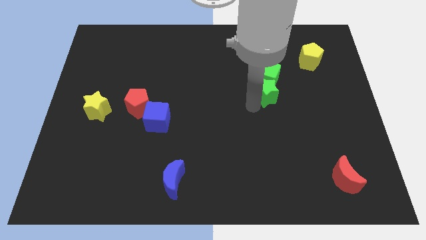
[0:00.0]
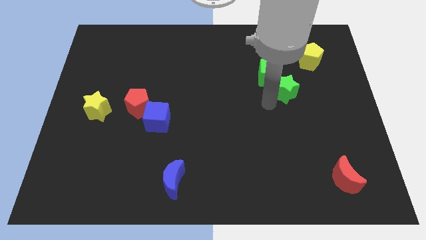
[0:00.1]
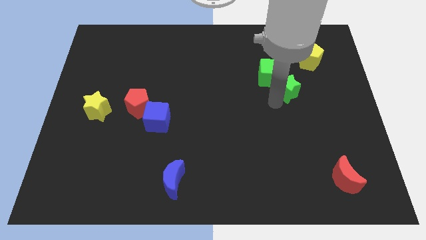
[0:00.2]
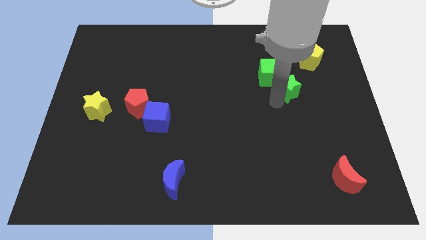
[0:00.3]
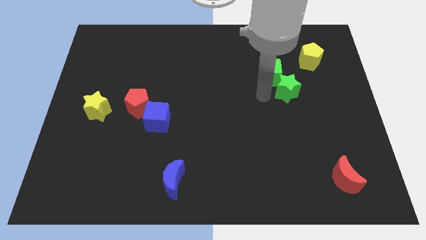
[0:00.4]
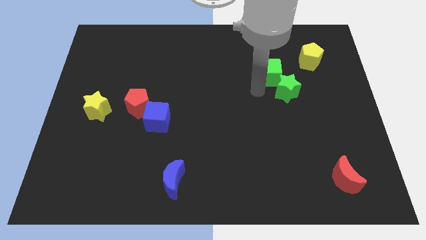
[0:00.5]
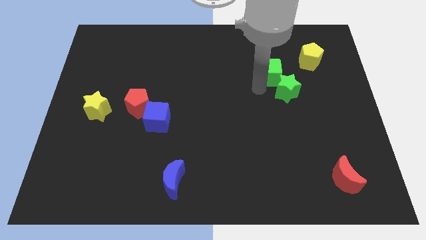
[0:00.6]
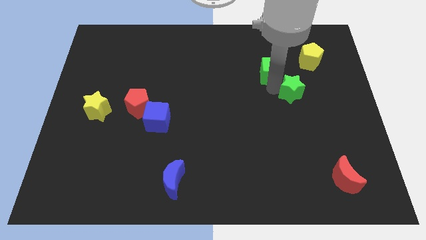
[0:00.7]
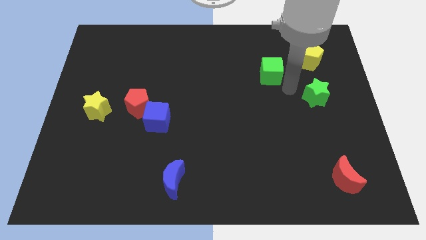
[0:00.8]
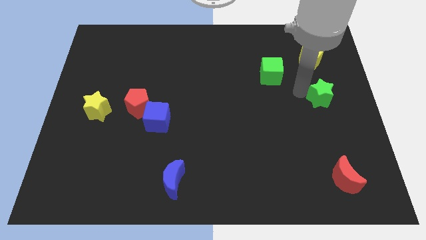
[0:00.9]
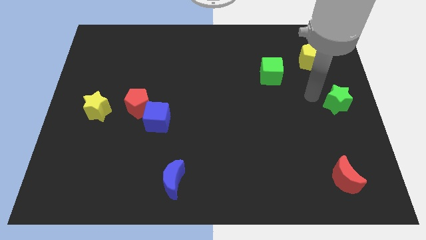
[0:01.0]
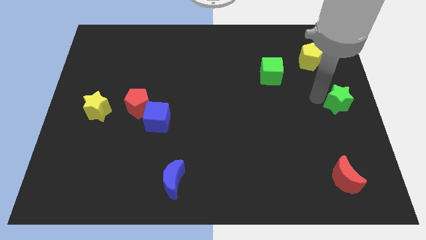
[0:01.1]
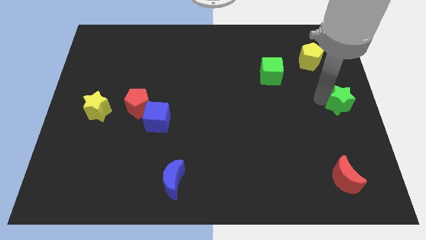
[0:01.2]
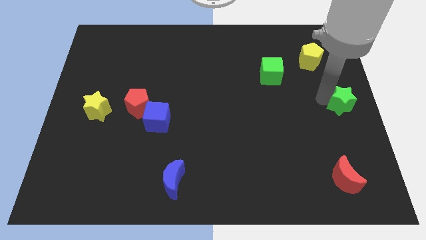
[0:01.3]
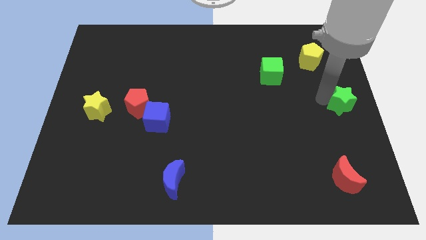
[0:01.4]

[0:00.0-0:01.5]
slide the green star to the center right corner of the board

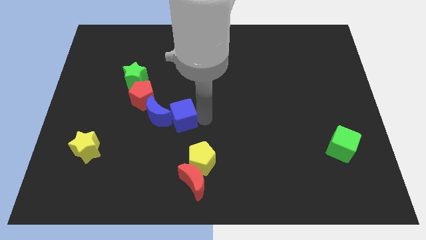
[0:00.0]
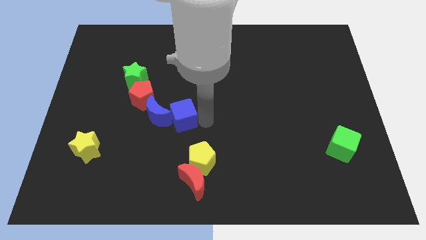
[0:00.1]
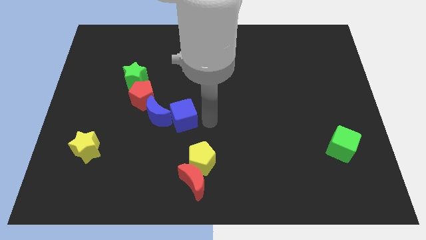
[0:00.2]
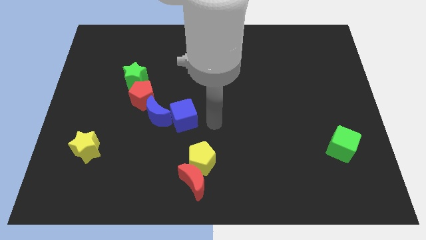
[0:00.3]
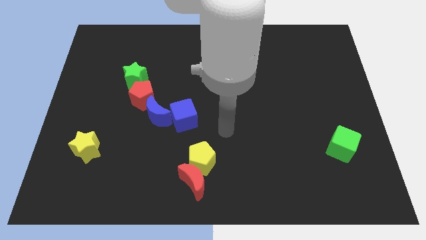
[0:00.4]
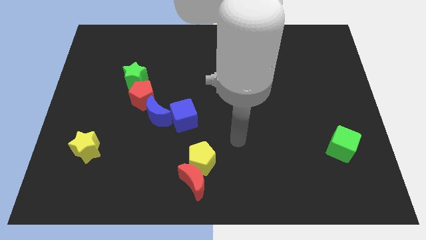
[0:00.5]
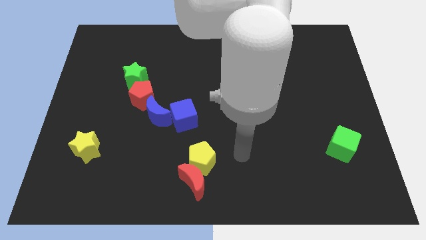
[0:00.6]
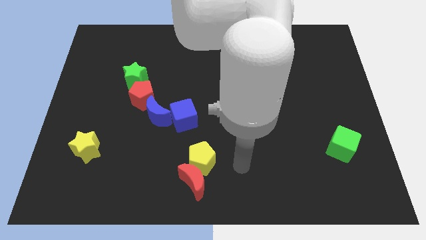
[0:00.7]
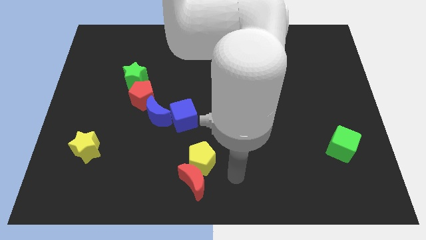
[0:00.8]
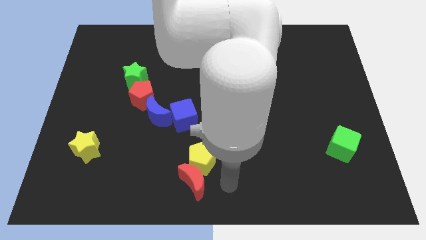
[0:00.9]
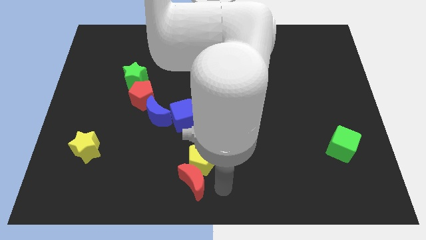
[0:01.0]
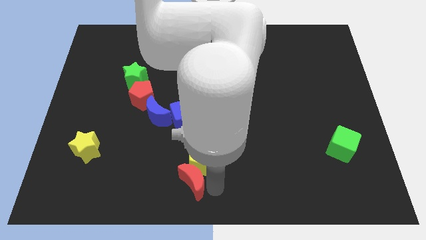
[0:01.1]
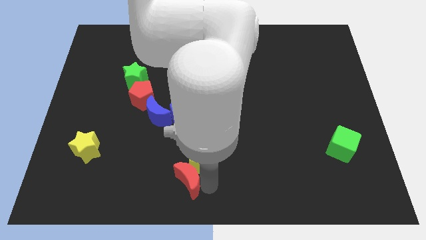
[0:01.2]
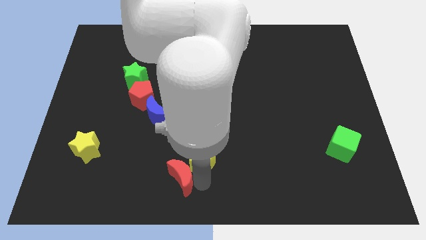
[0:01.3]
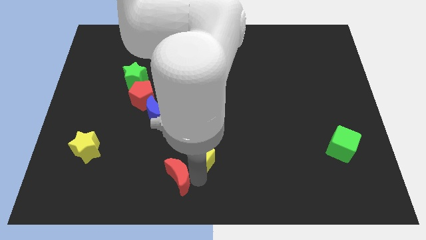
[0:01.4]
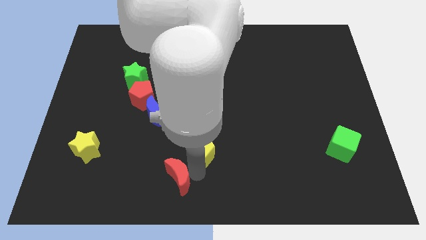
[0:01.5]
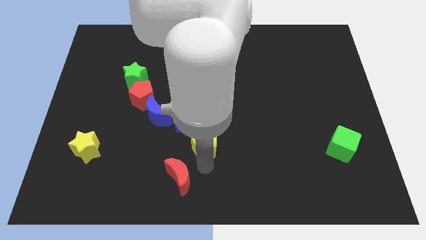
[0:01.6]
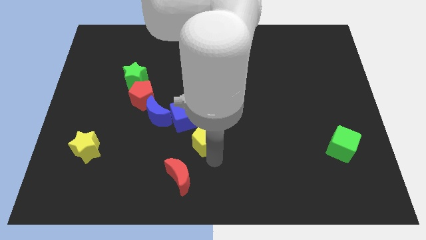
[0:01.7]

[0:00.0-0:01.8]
separate the yellow pentagon and red moon from each other

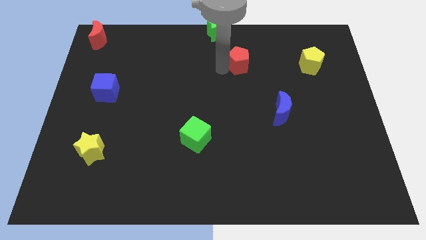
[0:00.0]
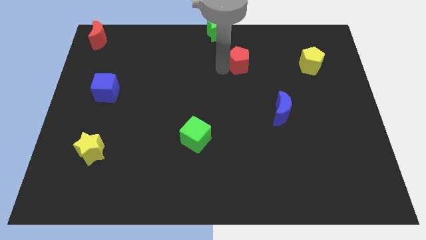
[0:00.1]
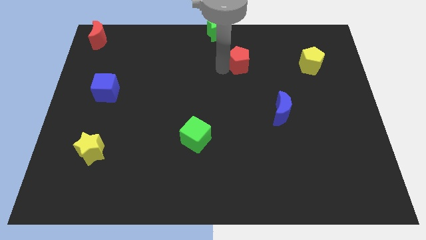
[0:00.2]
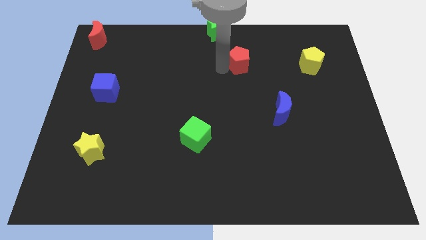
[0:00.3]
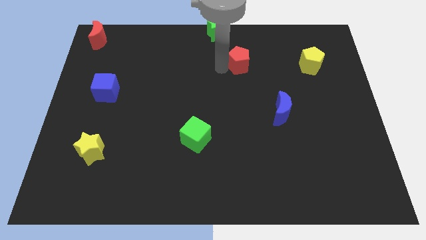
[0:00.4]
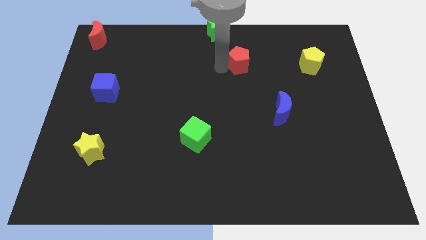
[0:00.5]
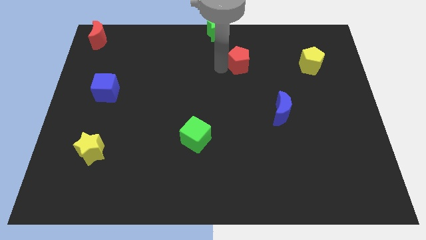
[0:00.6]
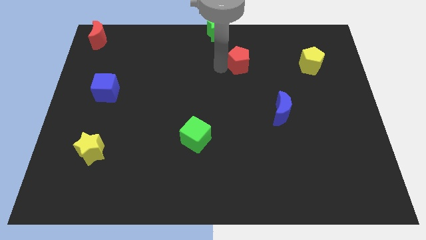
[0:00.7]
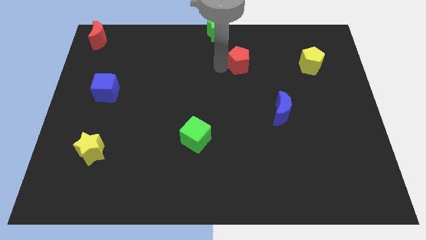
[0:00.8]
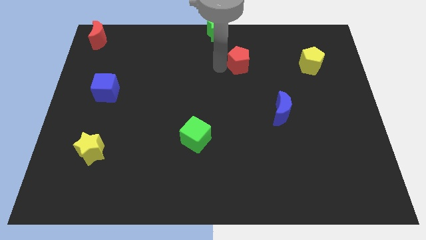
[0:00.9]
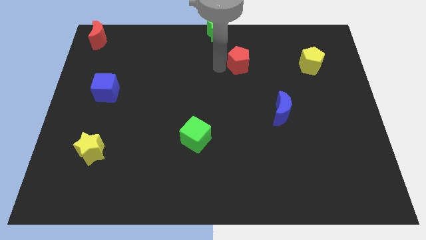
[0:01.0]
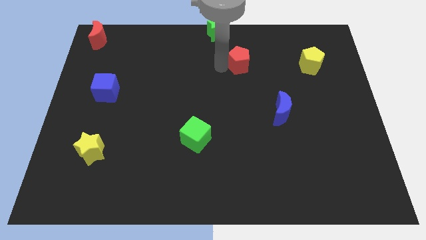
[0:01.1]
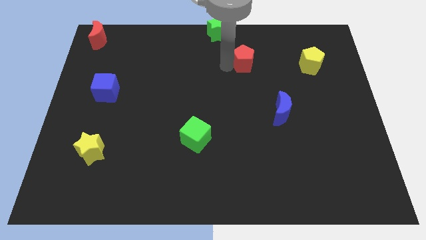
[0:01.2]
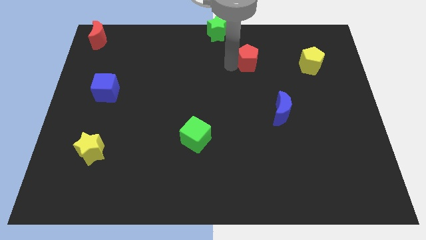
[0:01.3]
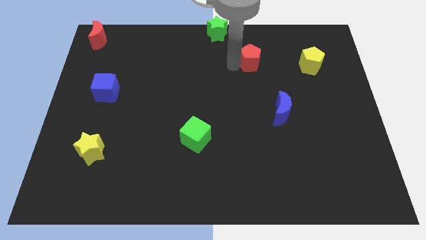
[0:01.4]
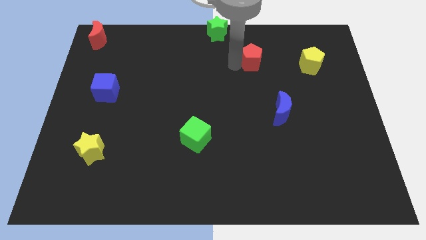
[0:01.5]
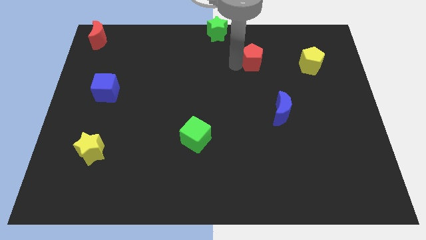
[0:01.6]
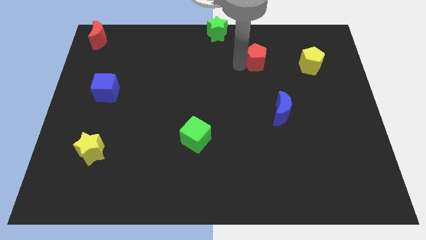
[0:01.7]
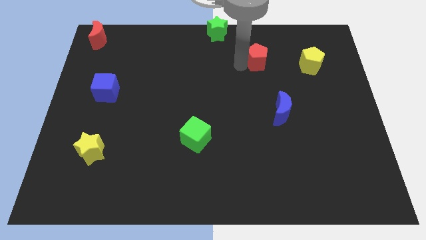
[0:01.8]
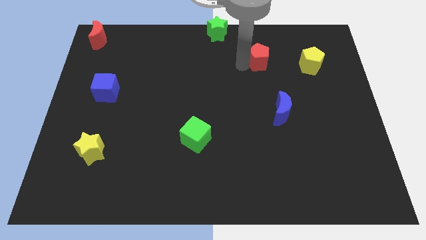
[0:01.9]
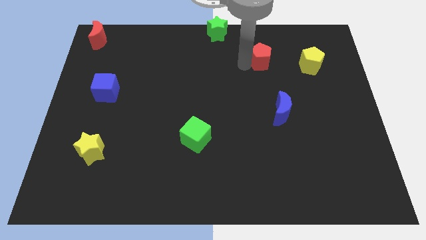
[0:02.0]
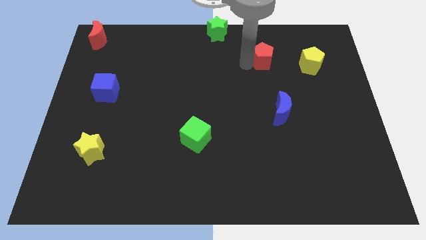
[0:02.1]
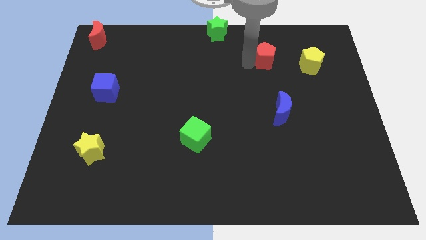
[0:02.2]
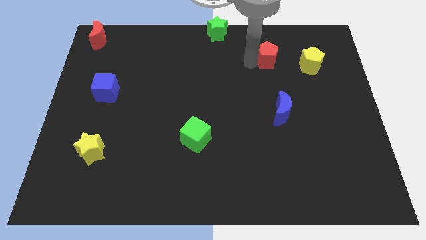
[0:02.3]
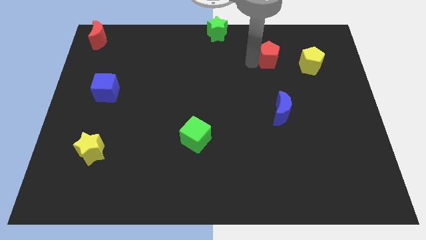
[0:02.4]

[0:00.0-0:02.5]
place the red pentagon to the left of the yellow pentagon

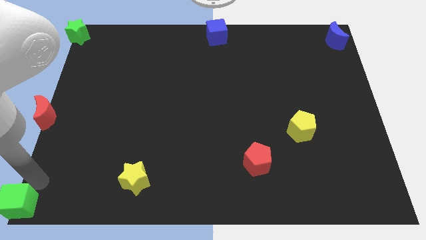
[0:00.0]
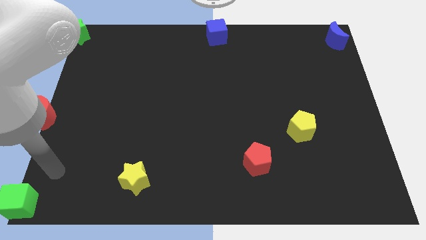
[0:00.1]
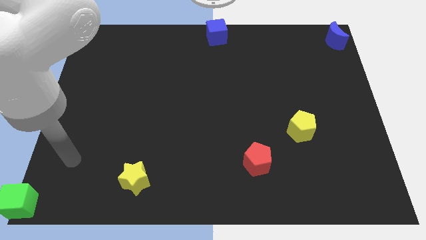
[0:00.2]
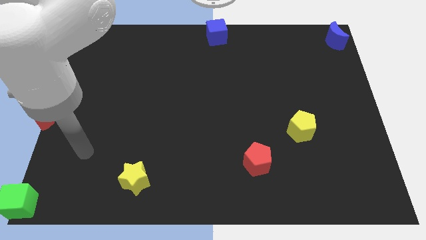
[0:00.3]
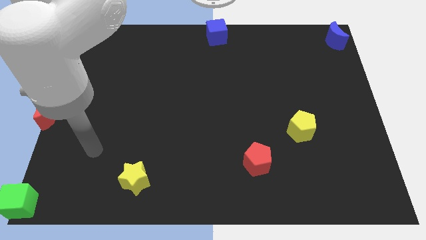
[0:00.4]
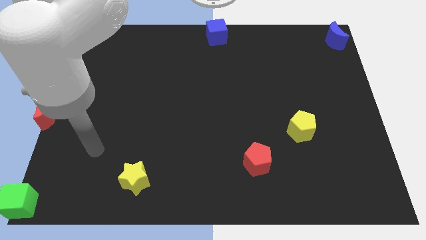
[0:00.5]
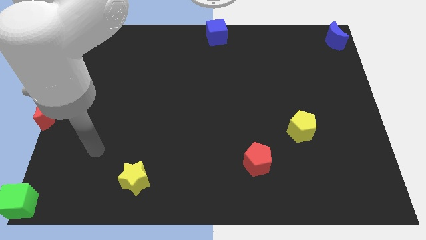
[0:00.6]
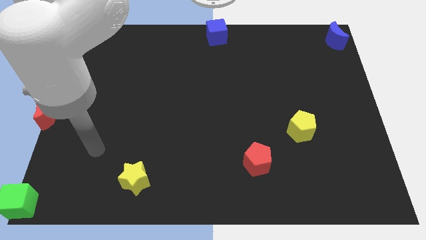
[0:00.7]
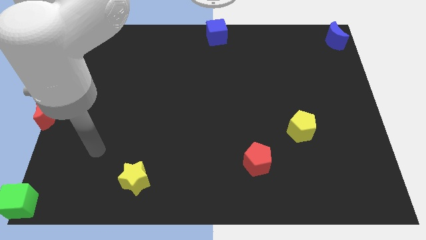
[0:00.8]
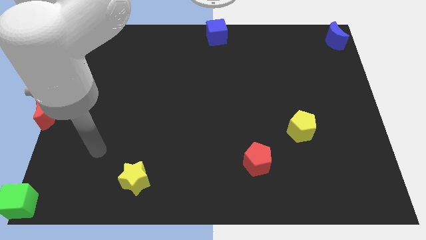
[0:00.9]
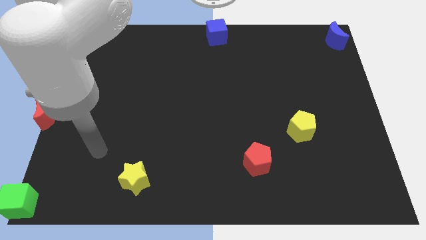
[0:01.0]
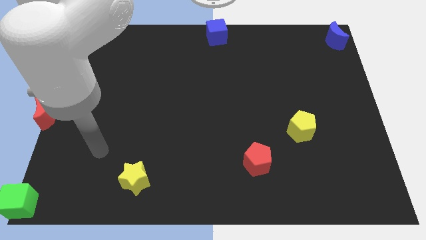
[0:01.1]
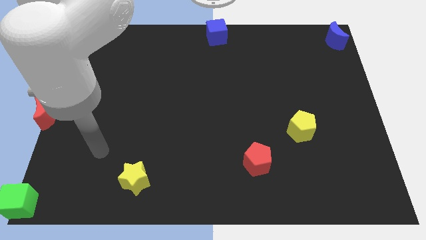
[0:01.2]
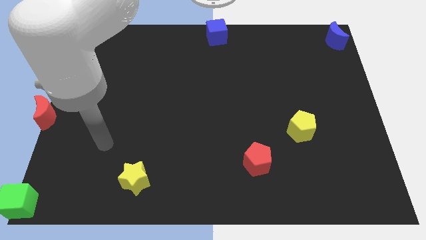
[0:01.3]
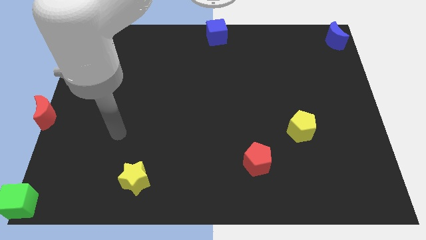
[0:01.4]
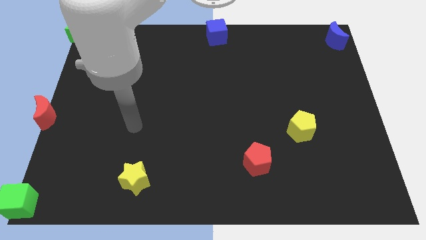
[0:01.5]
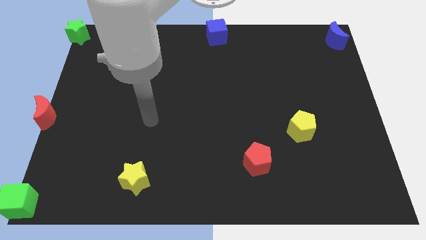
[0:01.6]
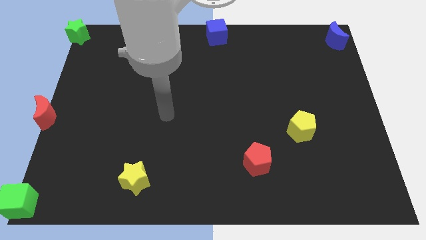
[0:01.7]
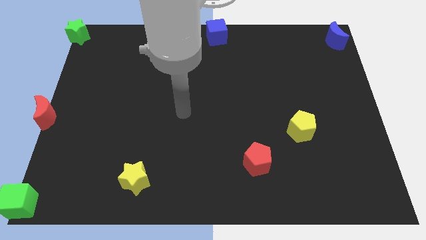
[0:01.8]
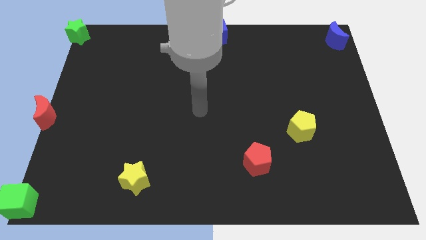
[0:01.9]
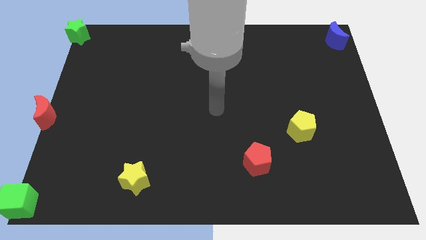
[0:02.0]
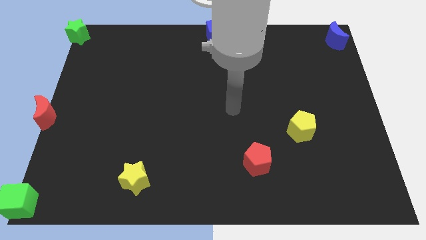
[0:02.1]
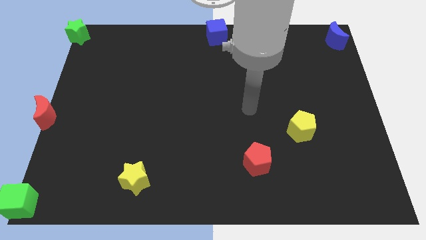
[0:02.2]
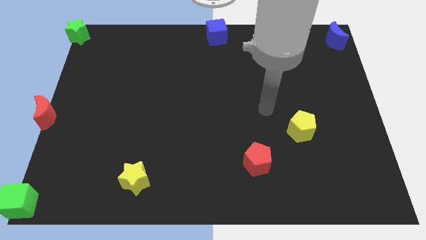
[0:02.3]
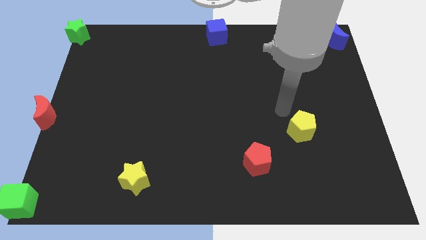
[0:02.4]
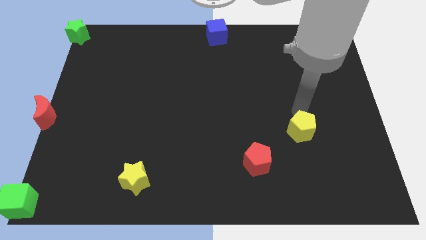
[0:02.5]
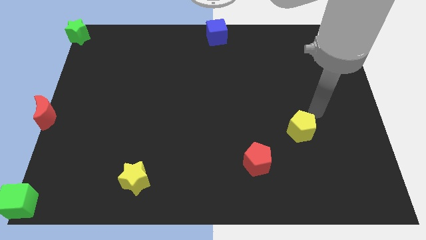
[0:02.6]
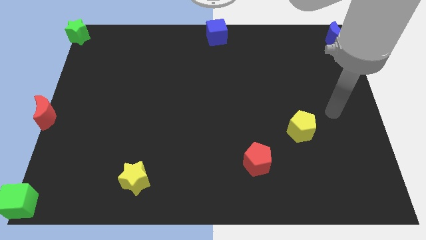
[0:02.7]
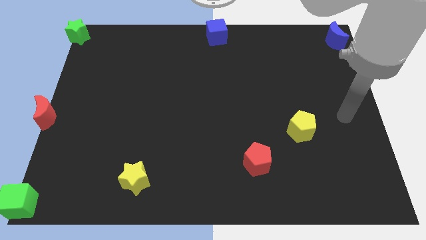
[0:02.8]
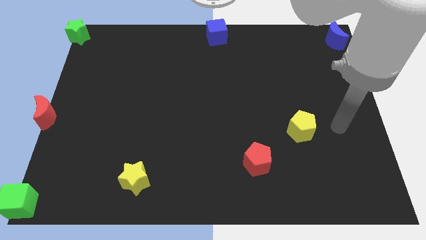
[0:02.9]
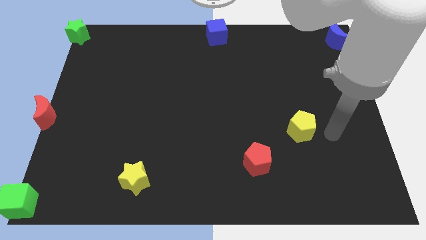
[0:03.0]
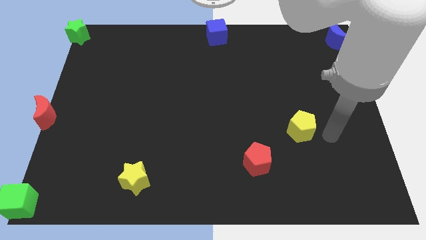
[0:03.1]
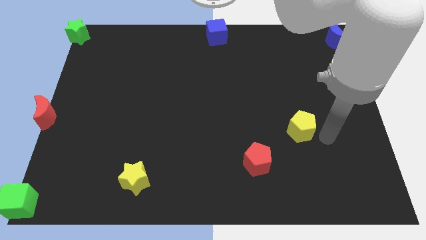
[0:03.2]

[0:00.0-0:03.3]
move your arm away from the green cube
